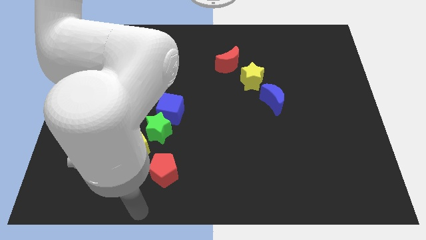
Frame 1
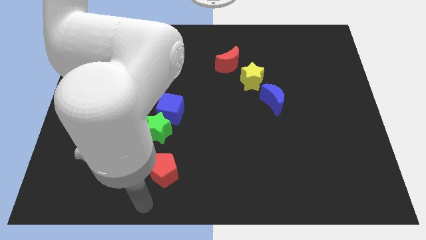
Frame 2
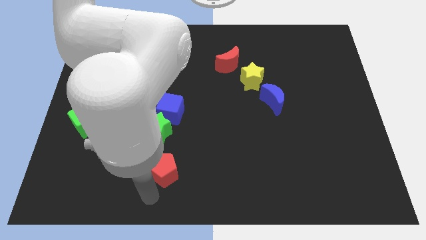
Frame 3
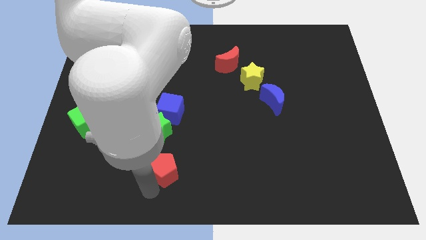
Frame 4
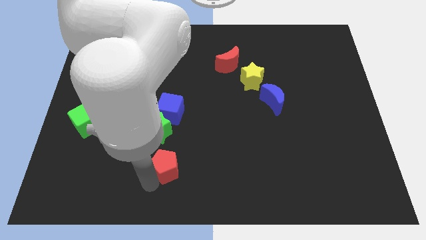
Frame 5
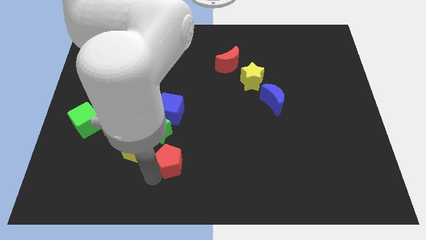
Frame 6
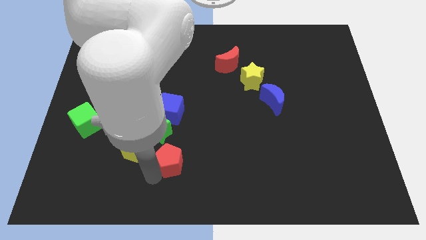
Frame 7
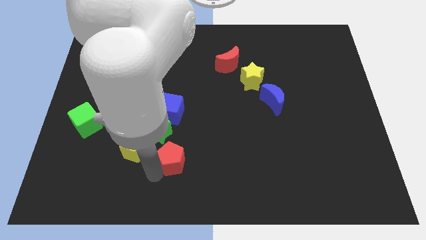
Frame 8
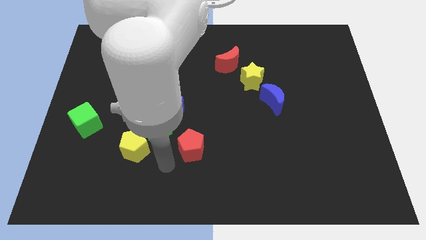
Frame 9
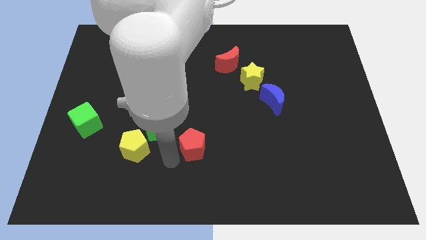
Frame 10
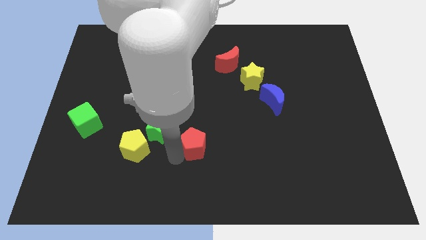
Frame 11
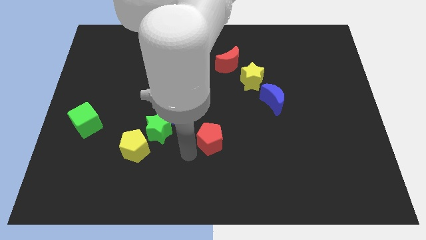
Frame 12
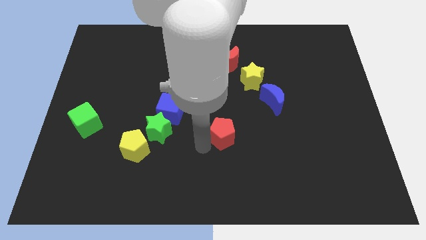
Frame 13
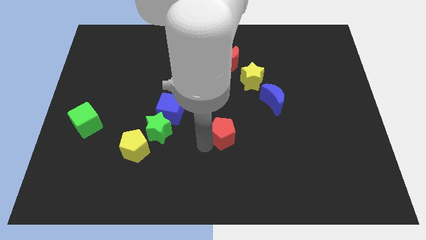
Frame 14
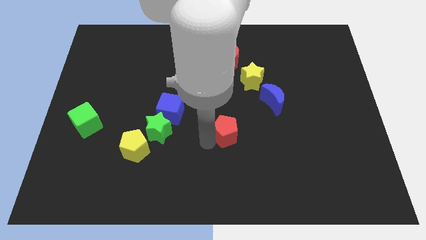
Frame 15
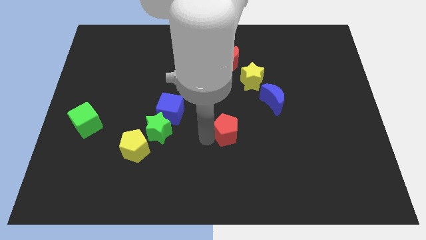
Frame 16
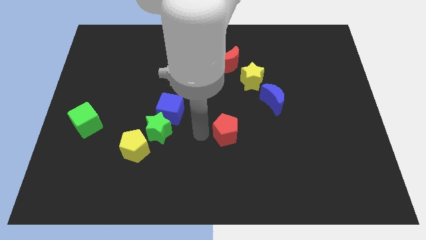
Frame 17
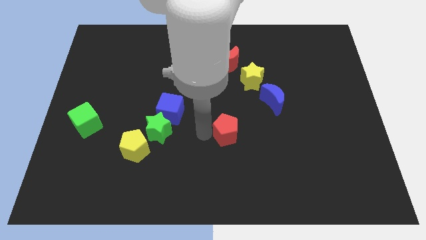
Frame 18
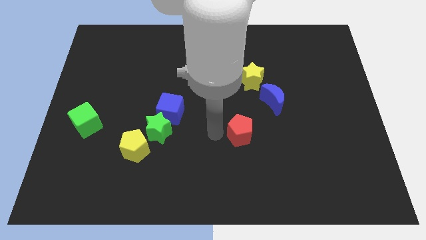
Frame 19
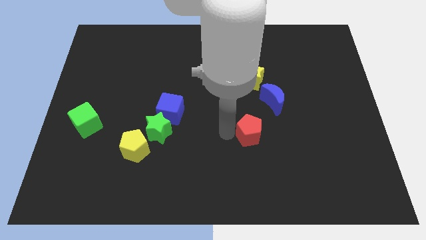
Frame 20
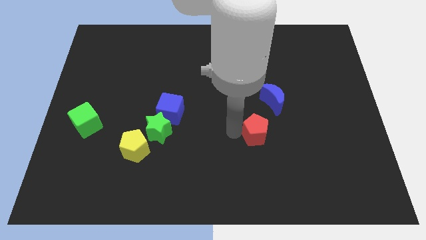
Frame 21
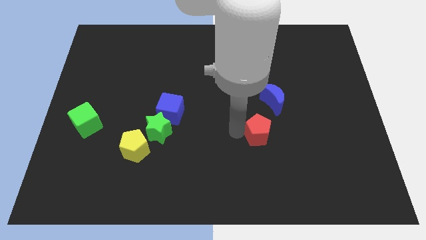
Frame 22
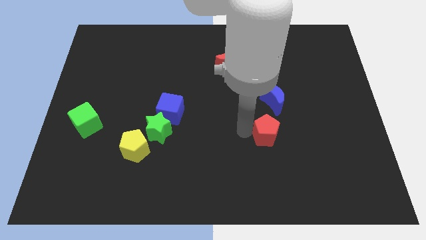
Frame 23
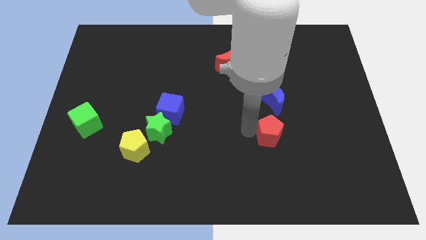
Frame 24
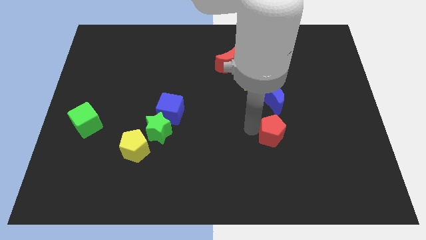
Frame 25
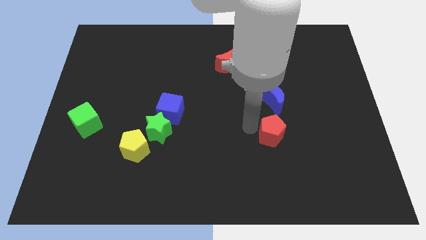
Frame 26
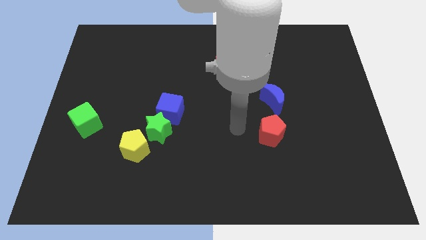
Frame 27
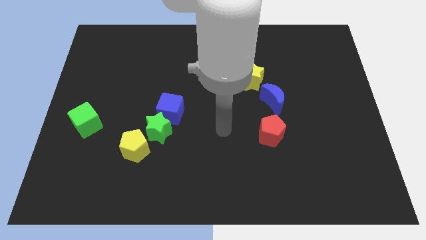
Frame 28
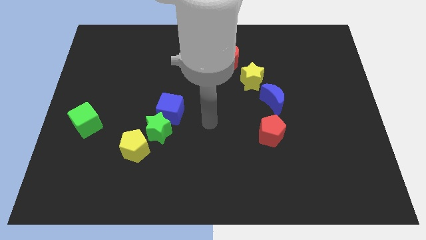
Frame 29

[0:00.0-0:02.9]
place red pentagon at the bottom of blue crescent

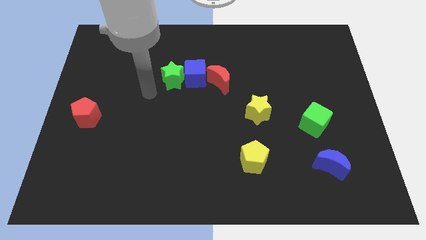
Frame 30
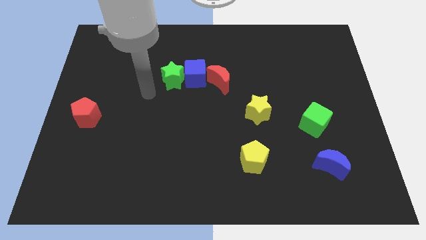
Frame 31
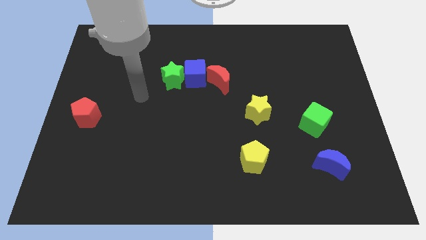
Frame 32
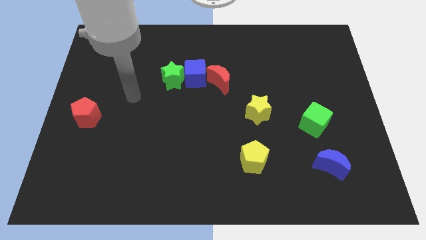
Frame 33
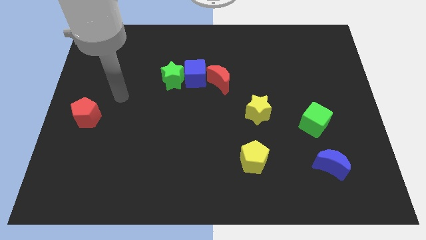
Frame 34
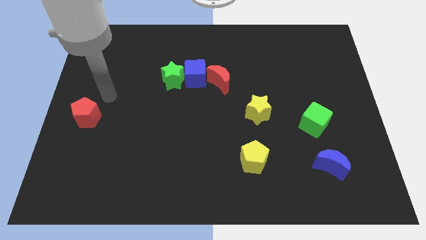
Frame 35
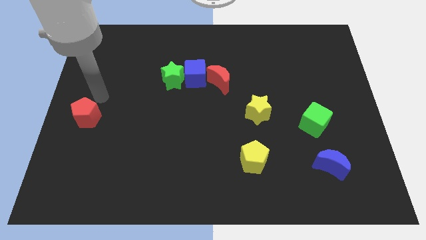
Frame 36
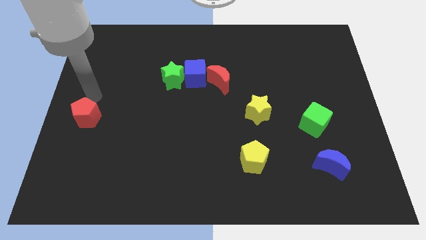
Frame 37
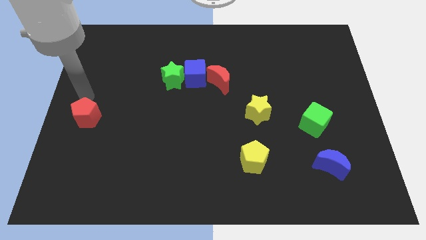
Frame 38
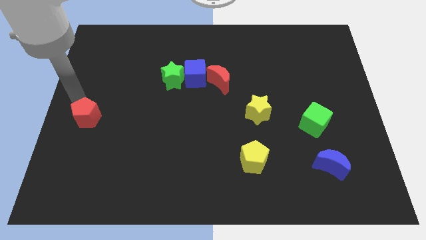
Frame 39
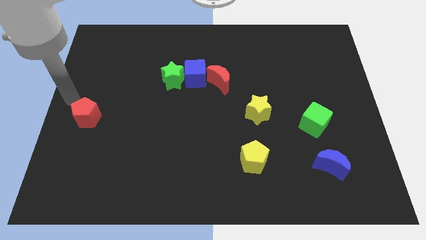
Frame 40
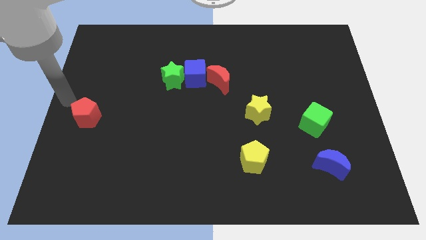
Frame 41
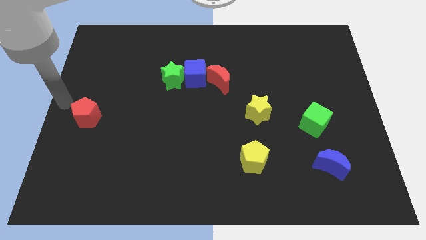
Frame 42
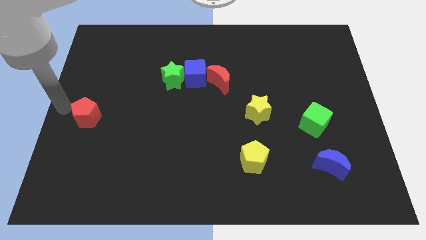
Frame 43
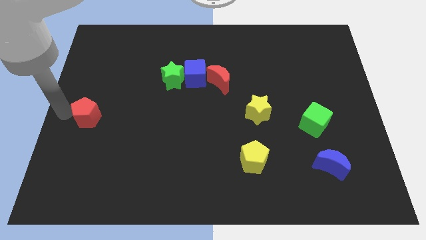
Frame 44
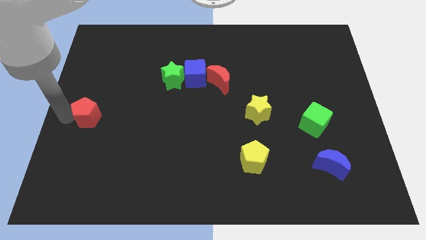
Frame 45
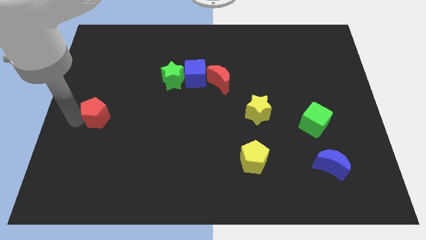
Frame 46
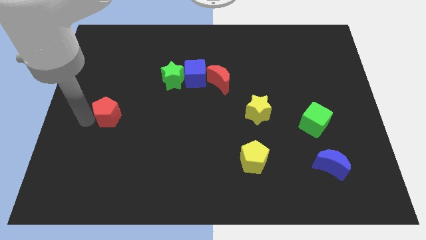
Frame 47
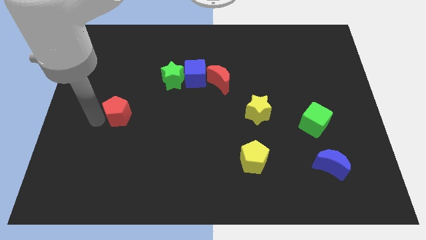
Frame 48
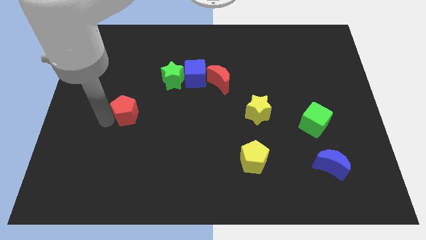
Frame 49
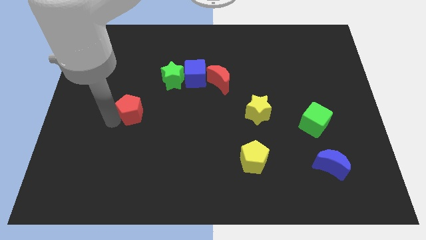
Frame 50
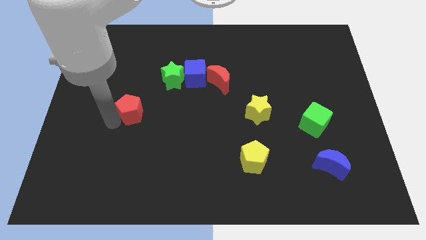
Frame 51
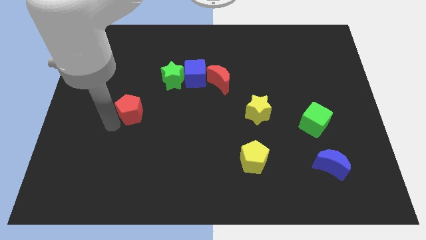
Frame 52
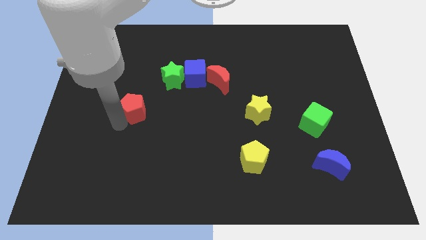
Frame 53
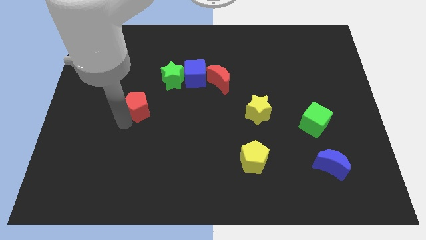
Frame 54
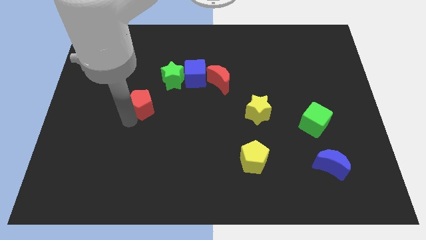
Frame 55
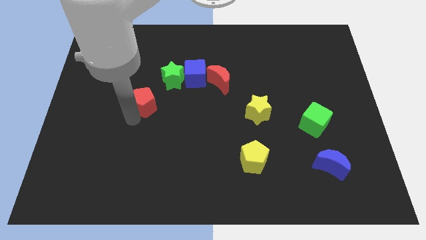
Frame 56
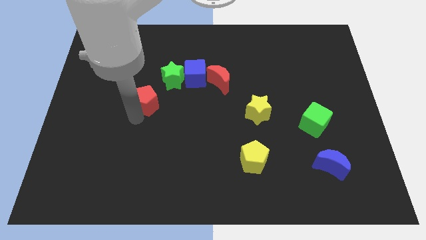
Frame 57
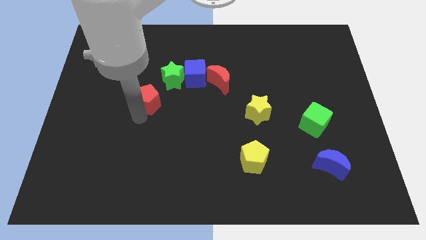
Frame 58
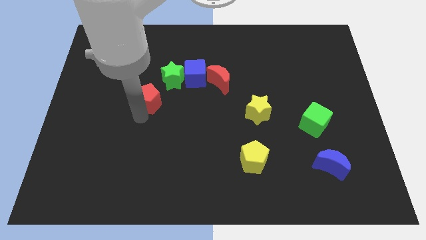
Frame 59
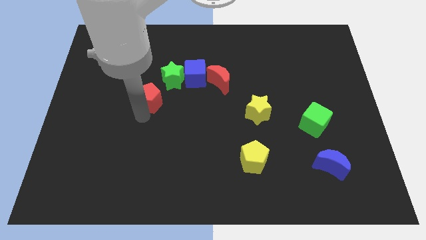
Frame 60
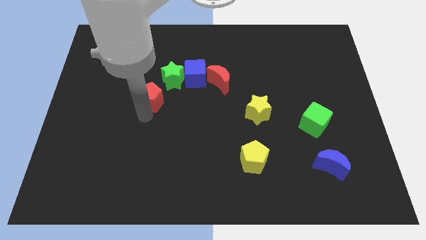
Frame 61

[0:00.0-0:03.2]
place the red pentagon diagonally bottom left to the green star

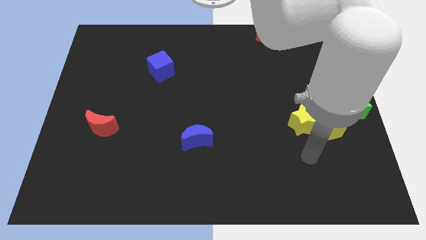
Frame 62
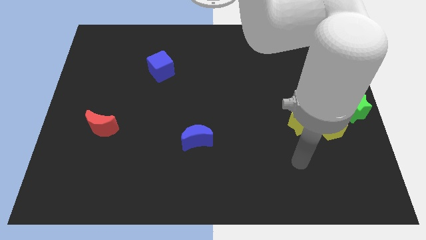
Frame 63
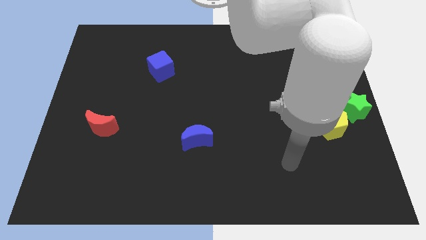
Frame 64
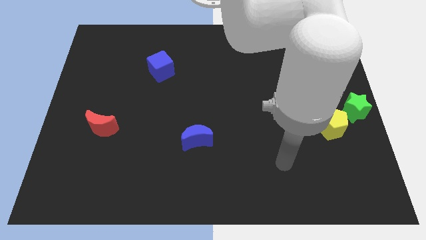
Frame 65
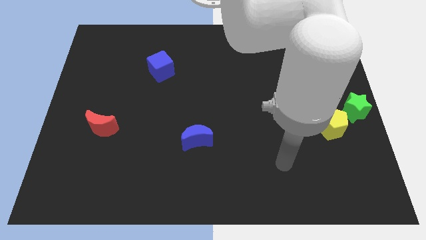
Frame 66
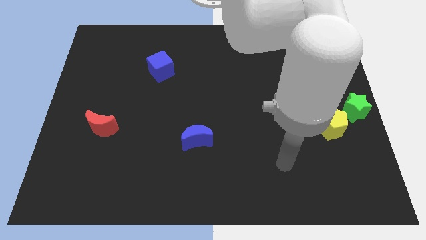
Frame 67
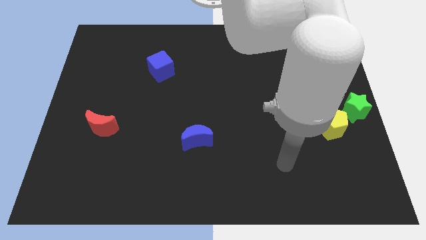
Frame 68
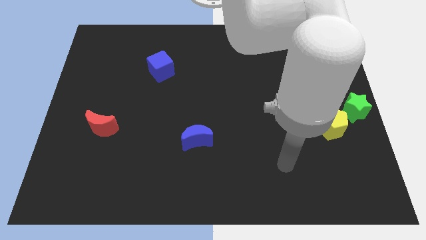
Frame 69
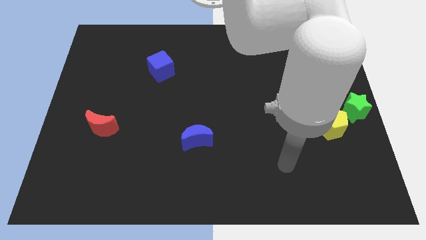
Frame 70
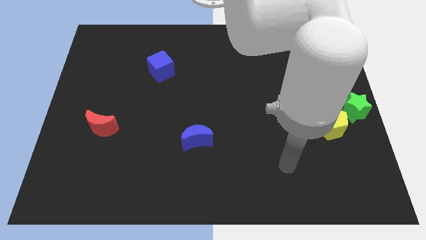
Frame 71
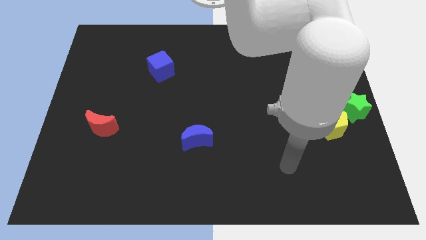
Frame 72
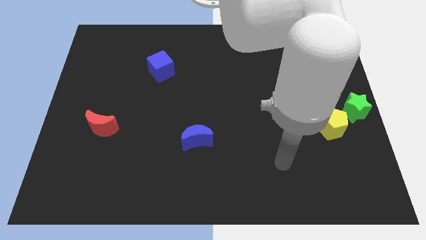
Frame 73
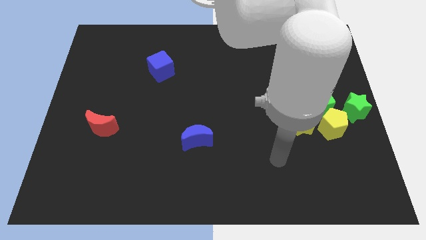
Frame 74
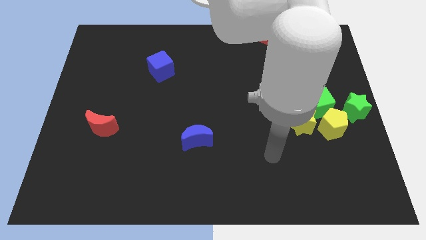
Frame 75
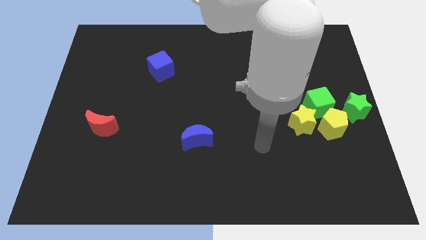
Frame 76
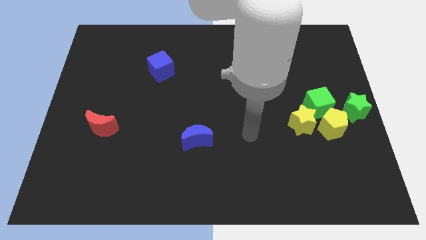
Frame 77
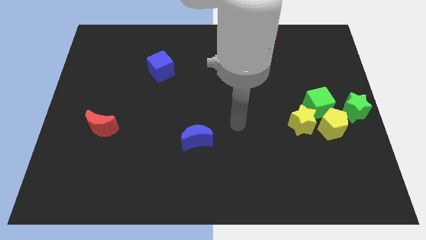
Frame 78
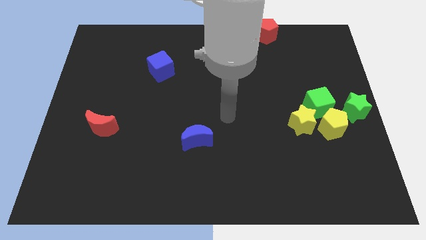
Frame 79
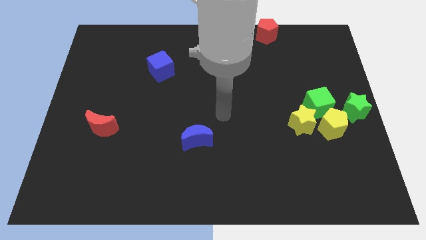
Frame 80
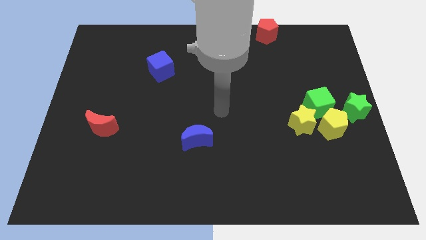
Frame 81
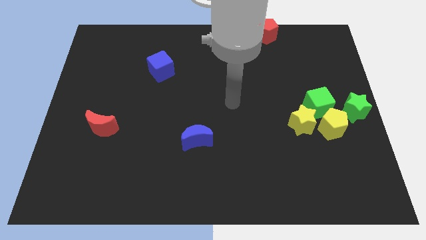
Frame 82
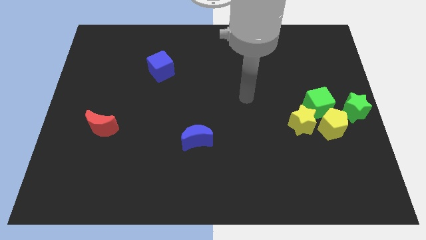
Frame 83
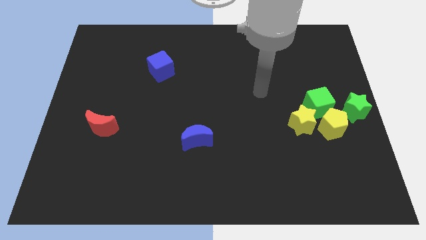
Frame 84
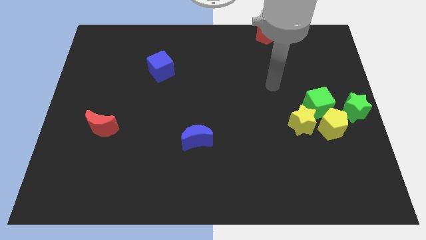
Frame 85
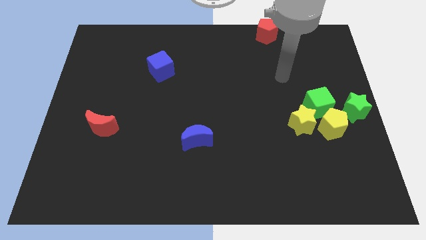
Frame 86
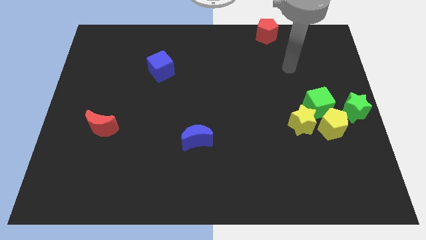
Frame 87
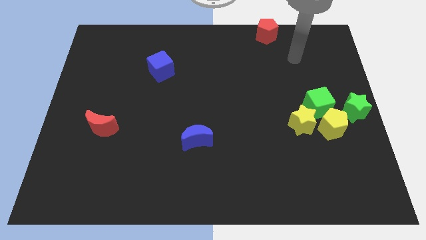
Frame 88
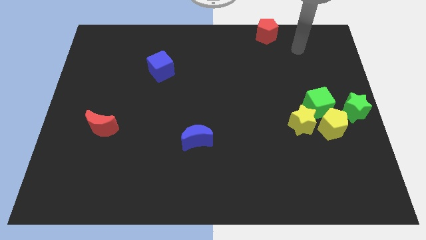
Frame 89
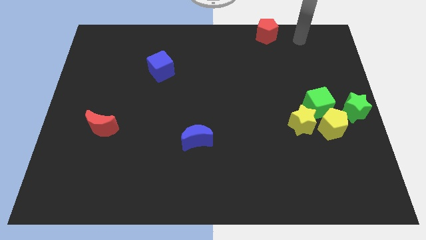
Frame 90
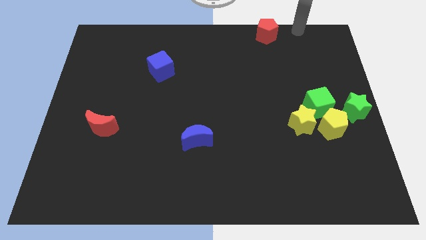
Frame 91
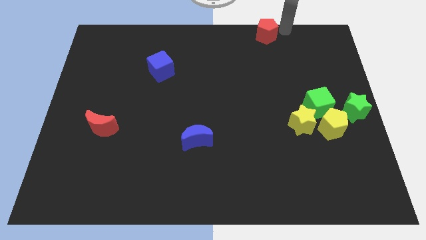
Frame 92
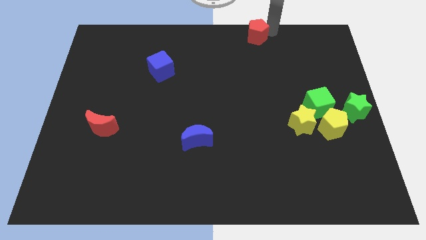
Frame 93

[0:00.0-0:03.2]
point your arm right to red pentagon
